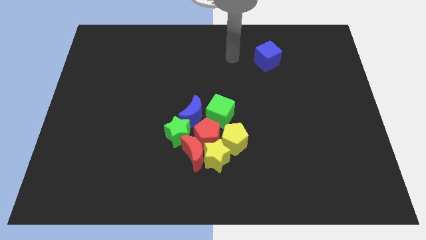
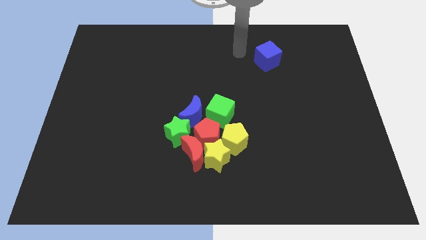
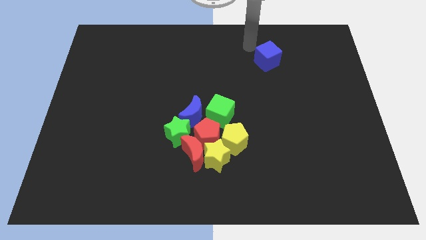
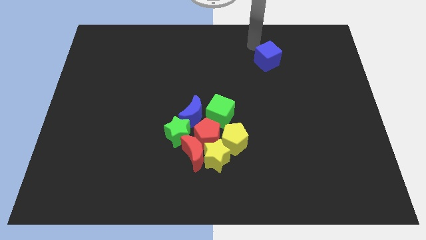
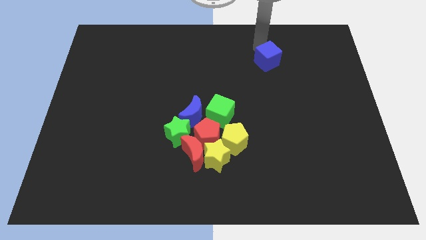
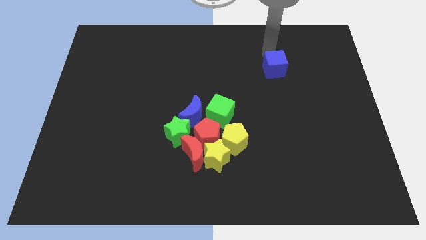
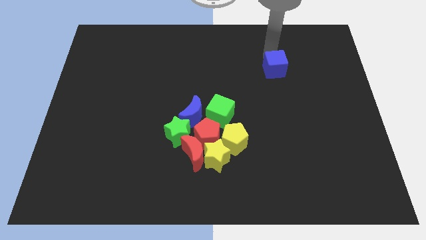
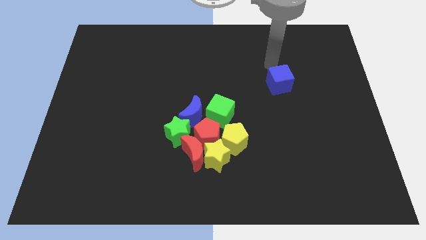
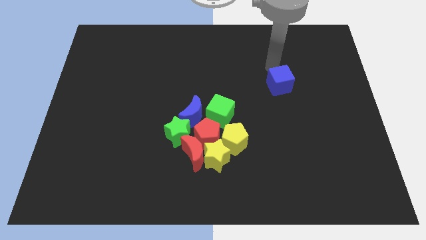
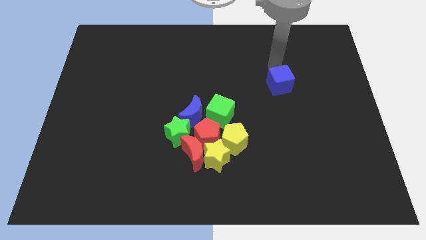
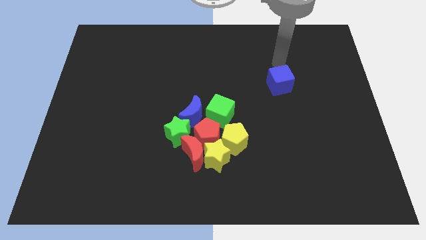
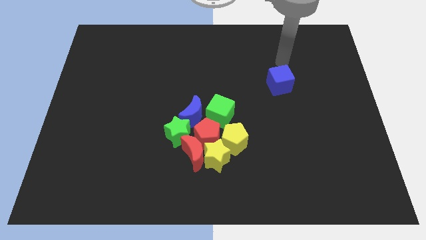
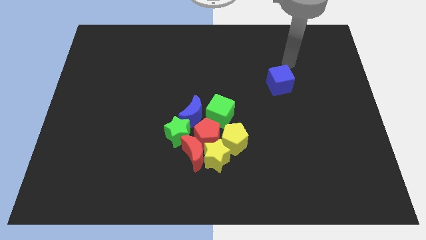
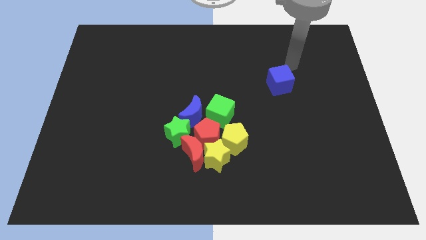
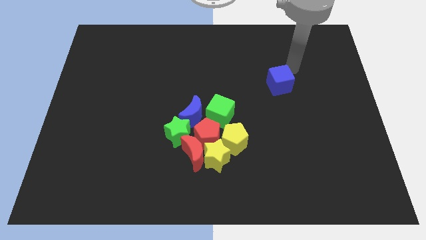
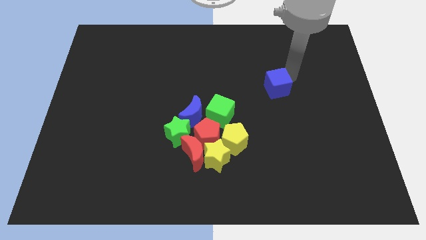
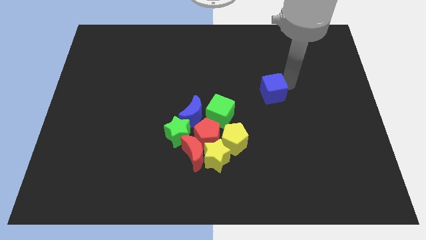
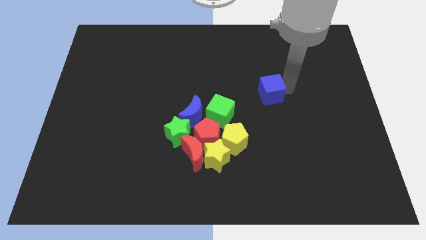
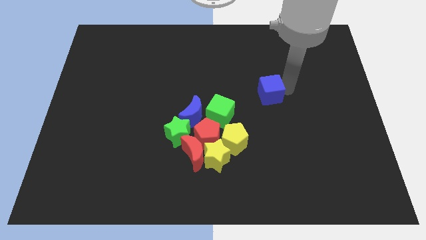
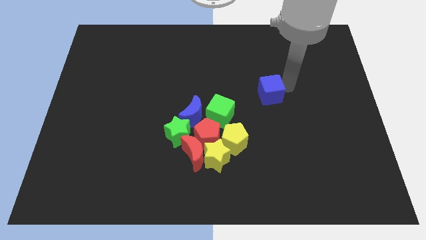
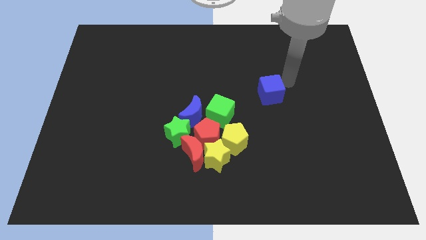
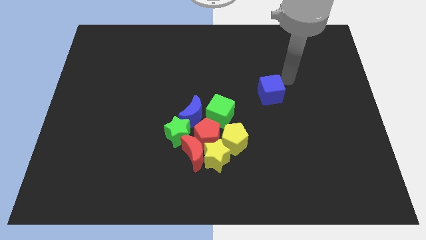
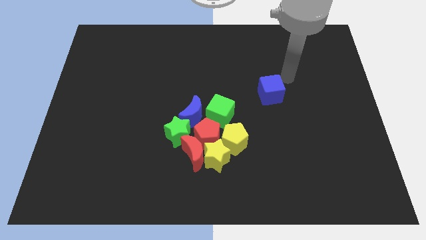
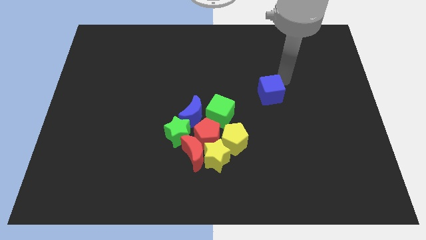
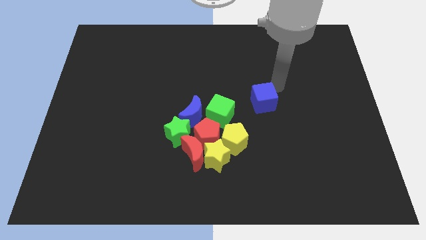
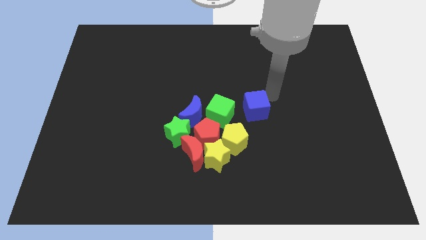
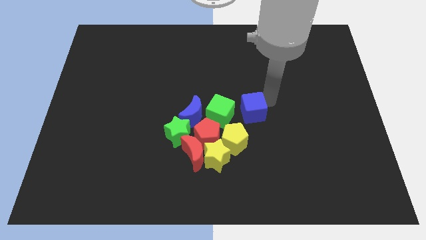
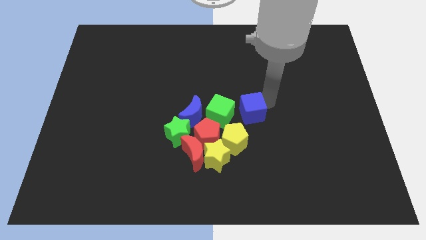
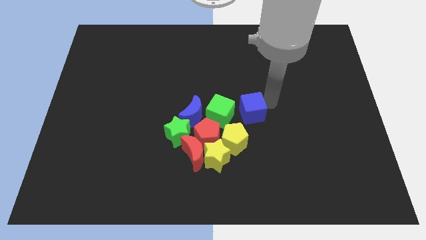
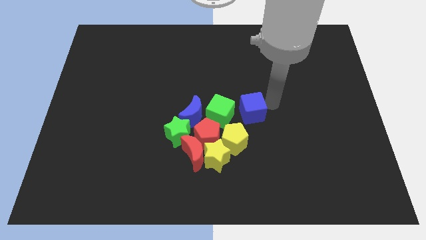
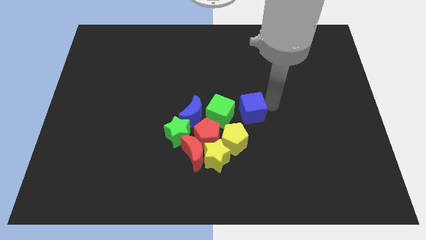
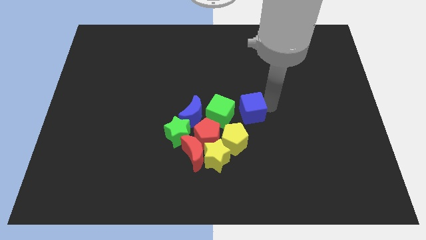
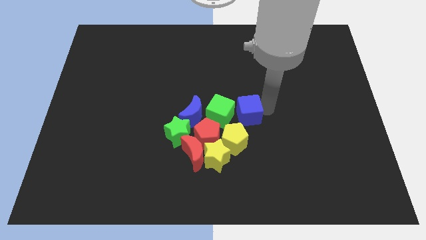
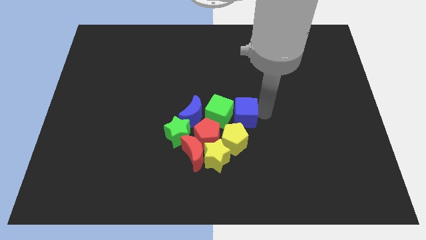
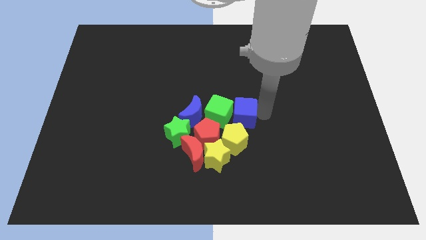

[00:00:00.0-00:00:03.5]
push the blue moon into green cube

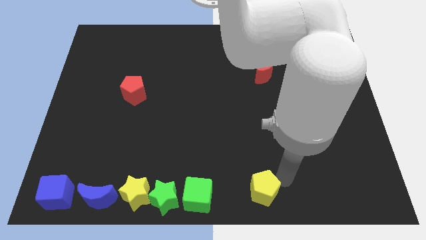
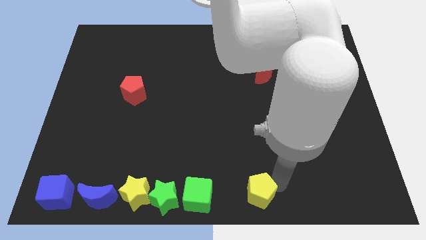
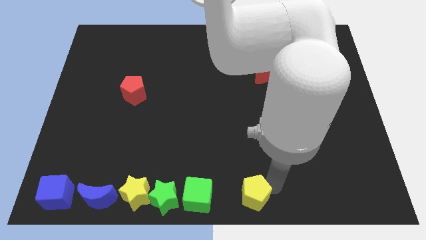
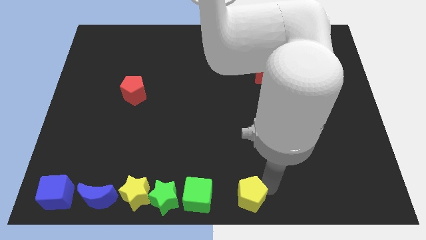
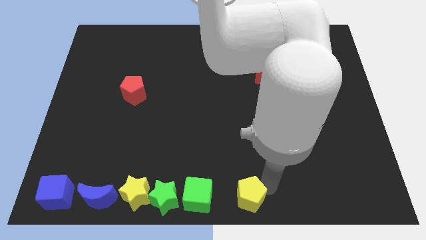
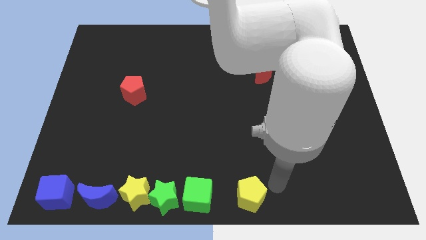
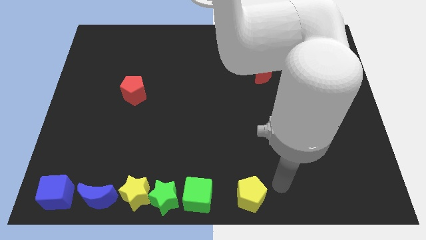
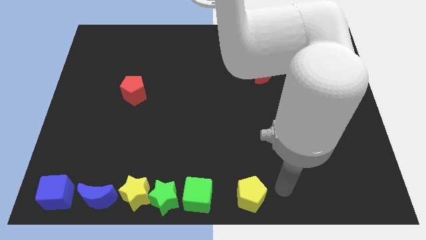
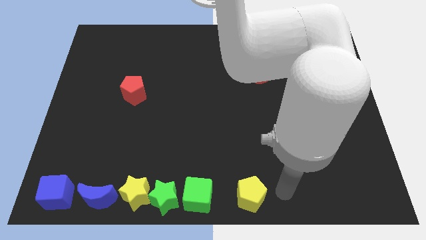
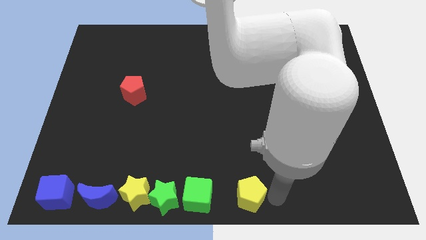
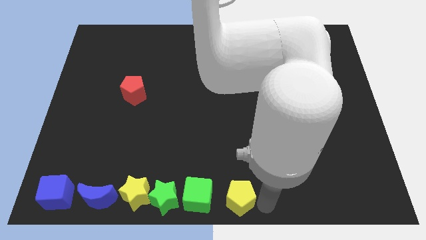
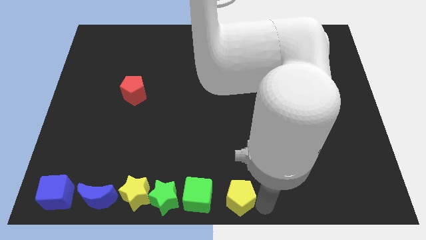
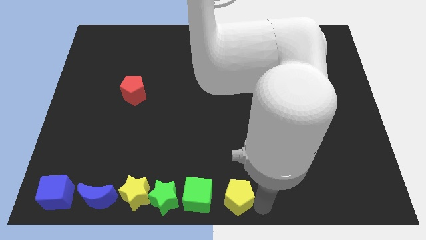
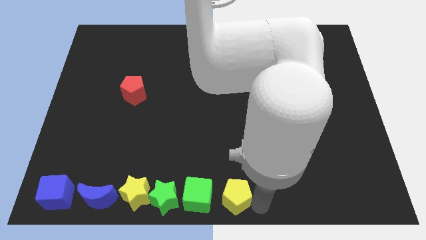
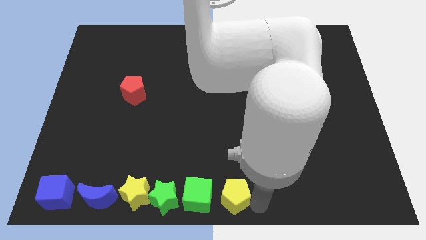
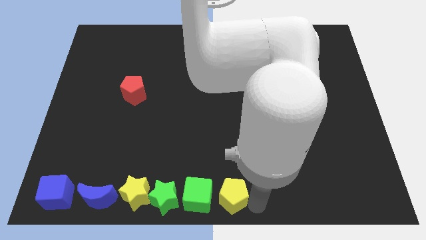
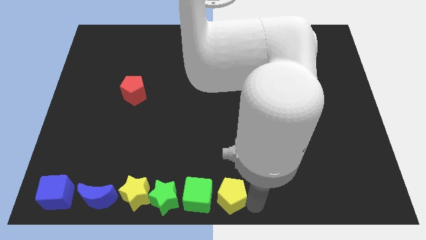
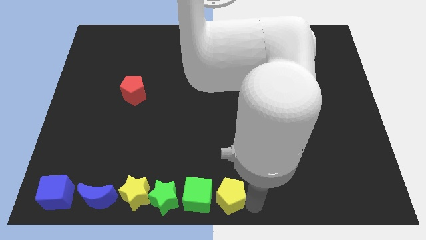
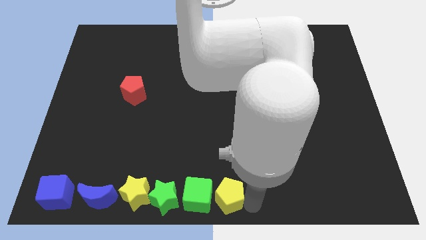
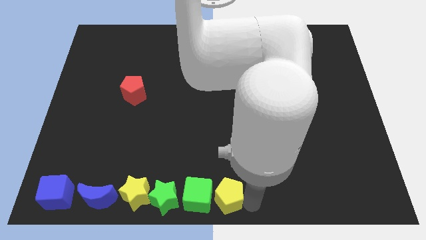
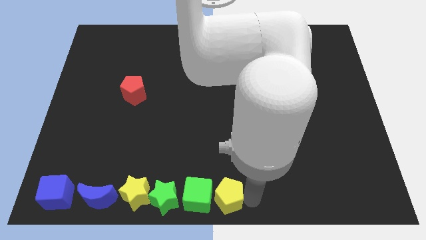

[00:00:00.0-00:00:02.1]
place yellow pentagon at the bottom center

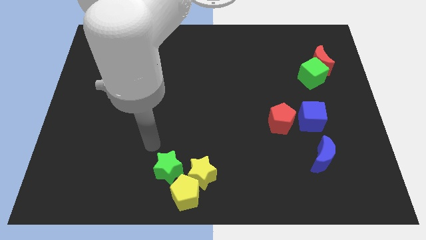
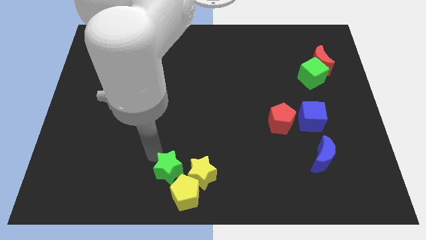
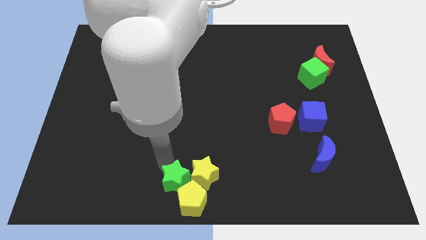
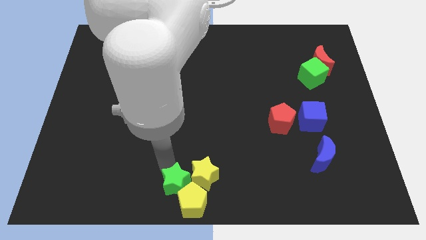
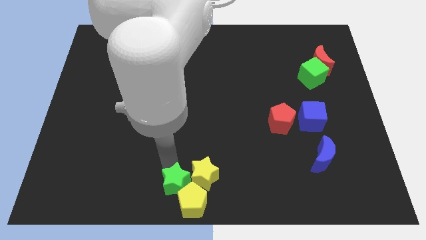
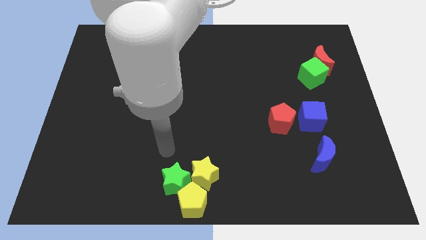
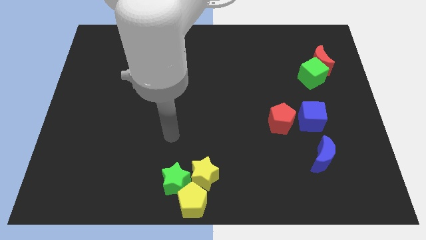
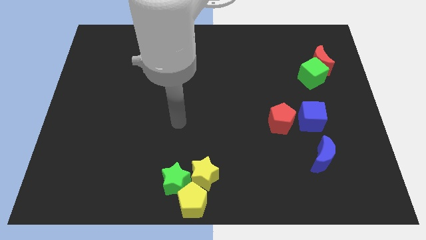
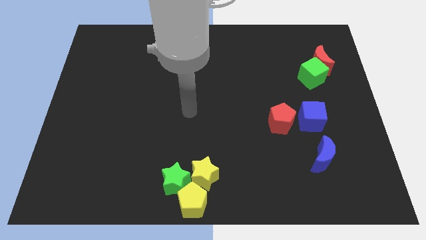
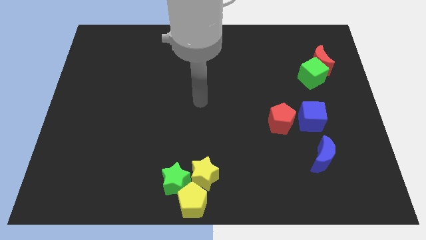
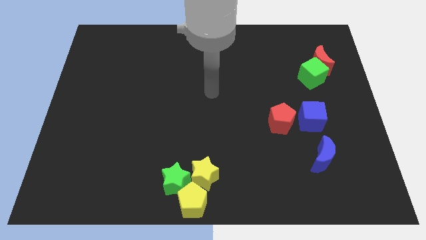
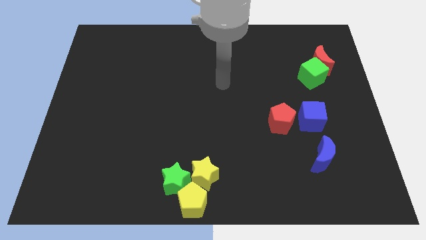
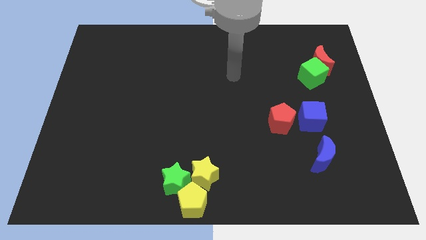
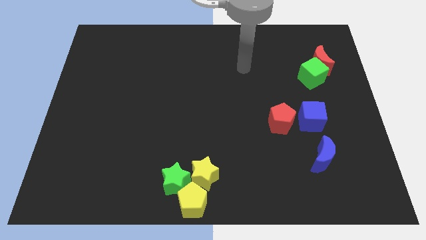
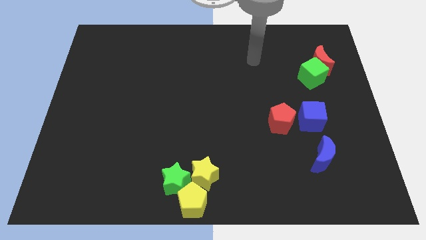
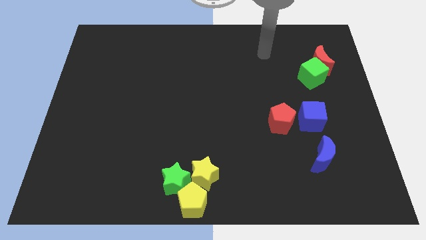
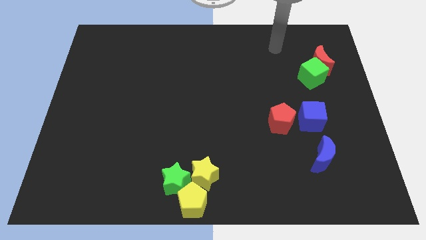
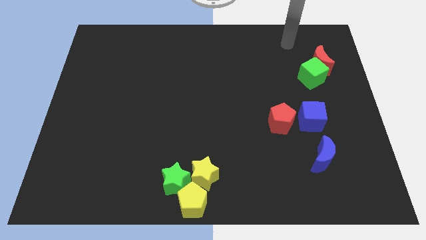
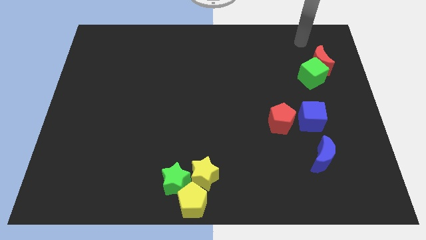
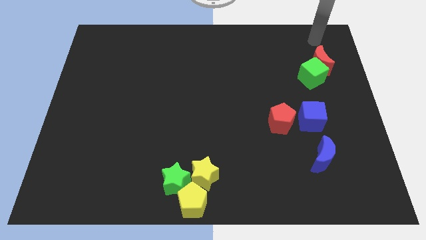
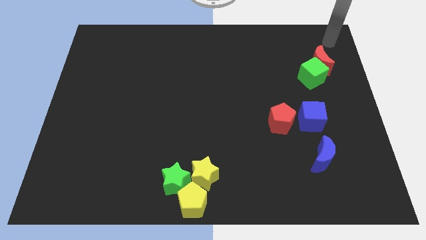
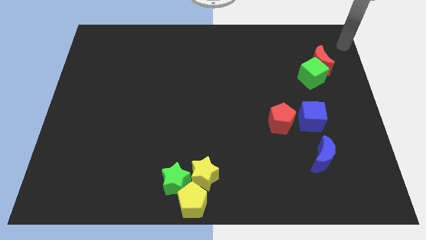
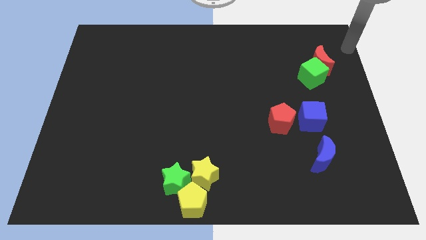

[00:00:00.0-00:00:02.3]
go and point your hand at the top right corner

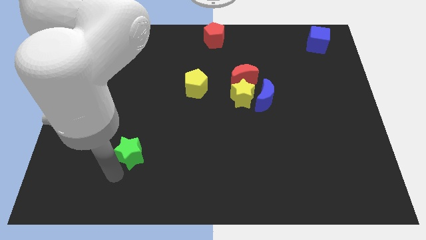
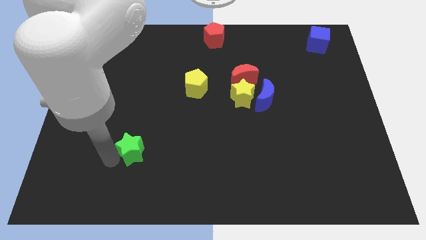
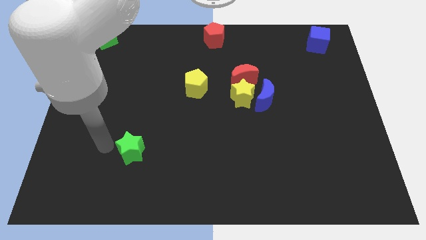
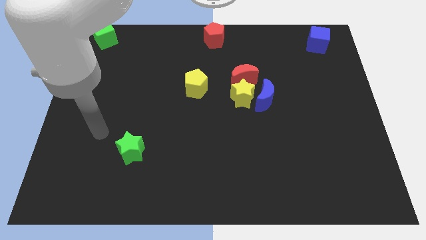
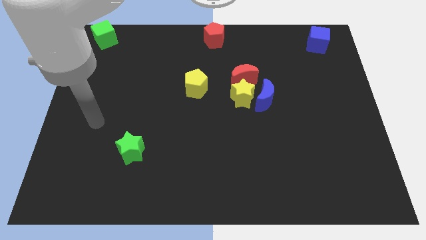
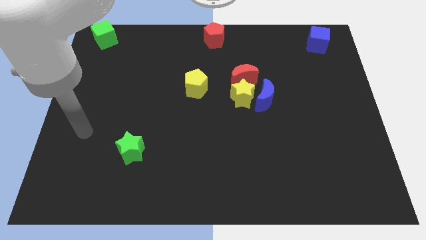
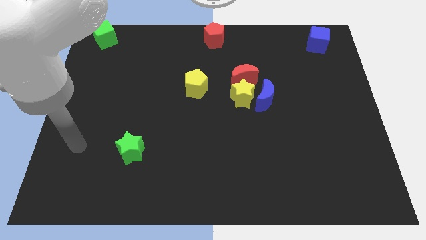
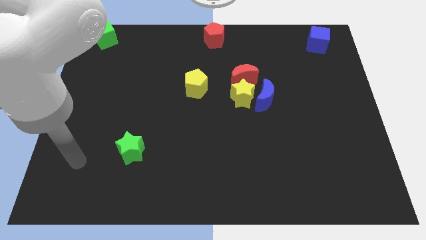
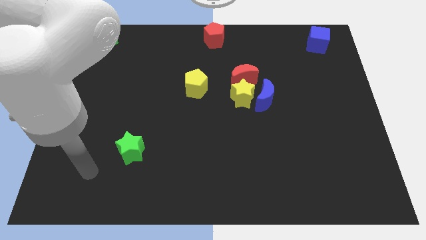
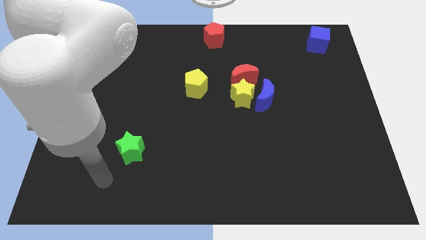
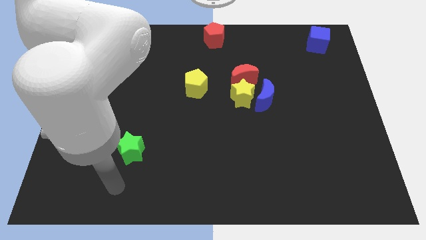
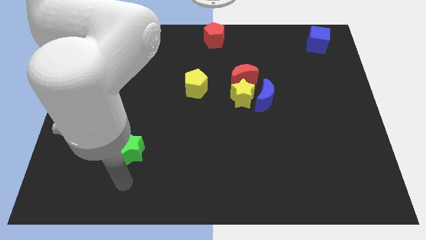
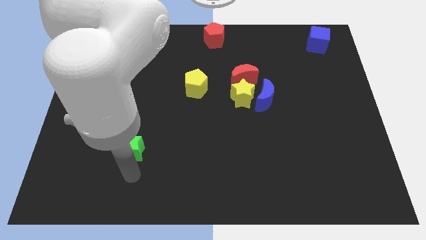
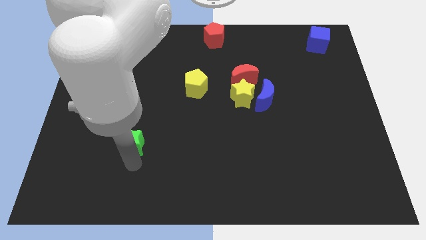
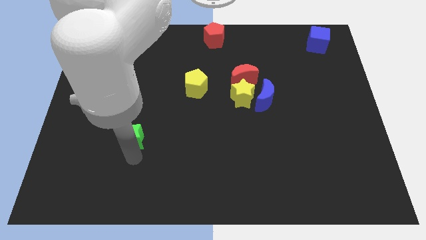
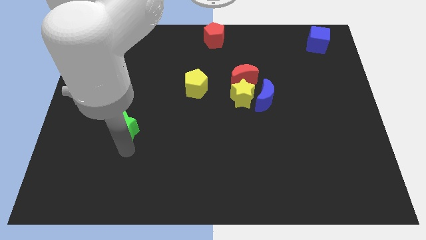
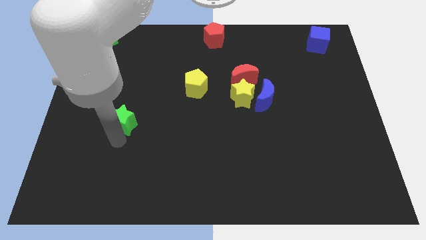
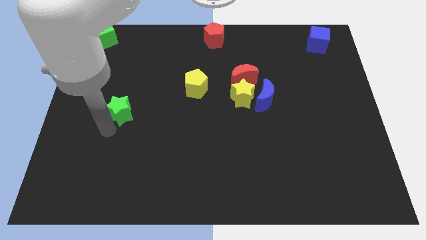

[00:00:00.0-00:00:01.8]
push the green star upwards to the top left side
